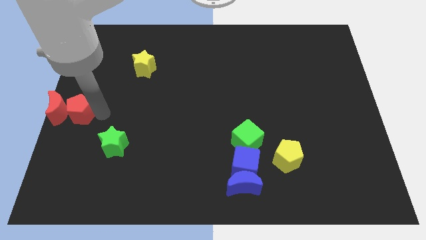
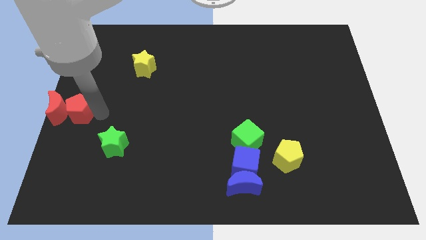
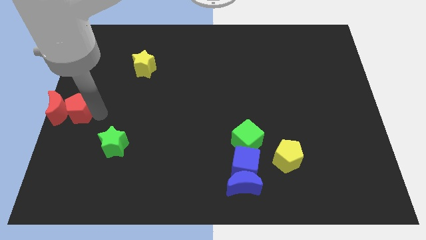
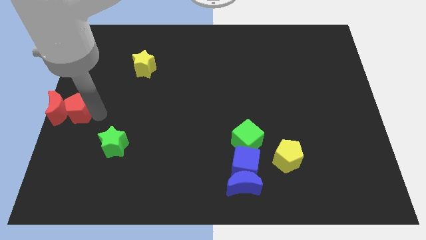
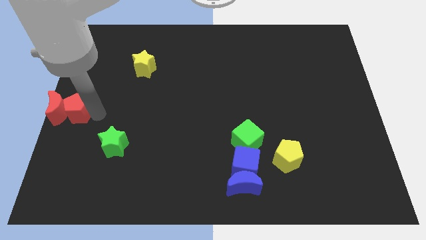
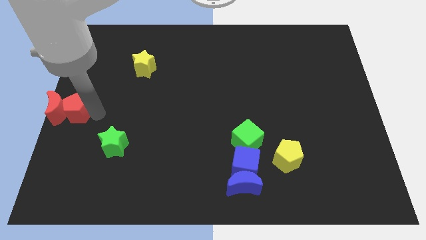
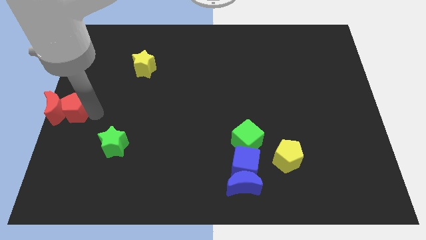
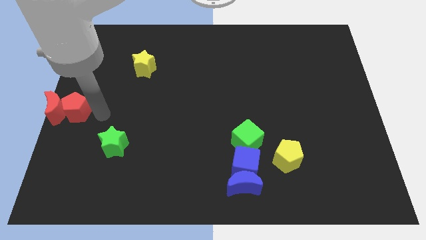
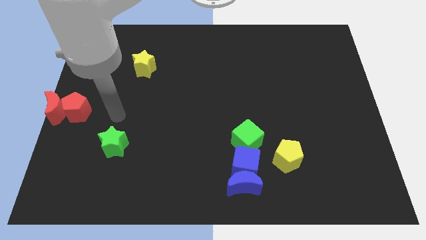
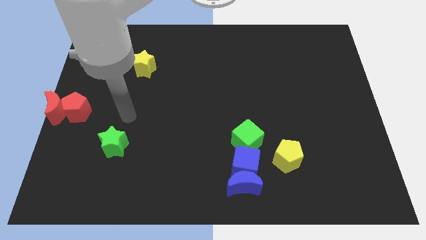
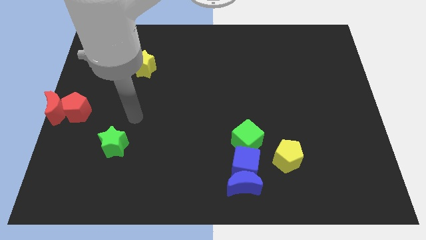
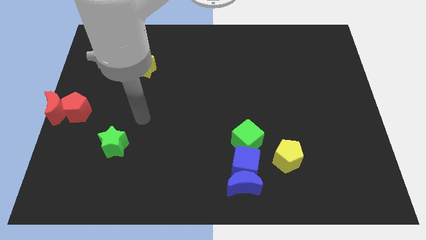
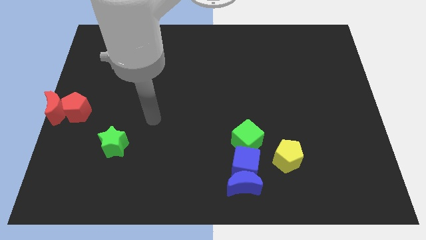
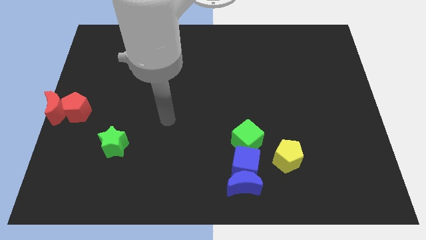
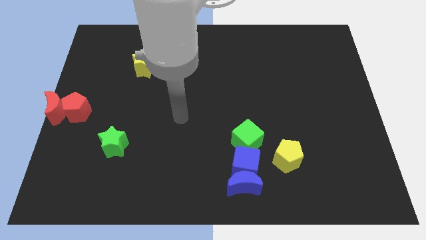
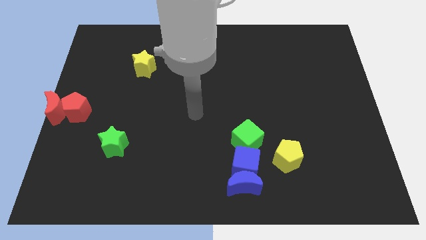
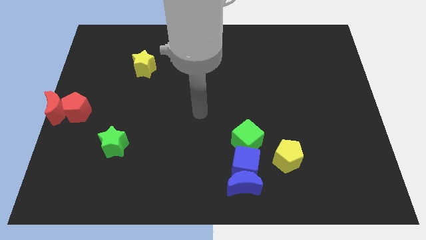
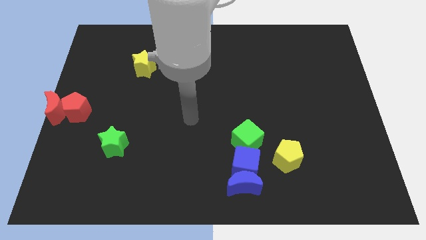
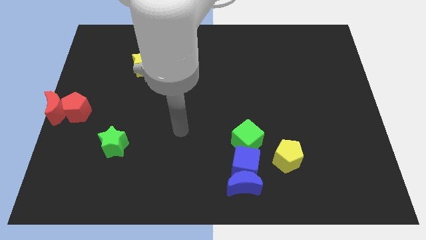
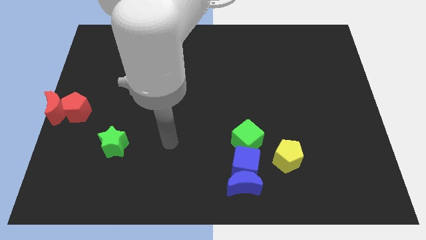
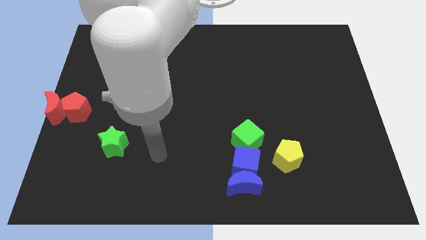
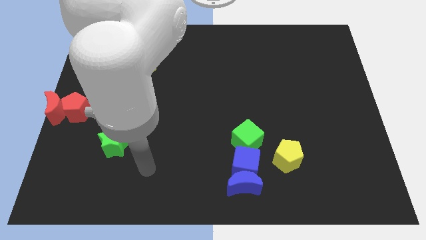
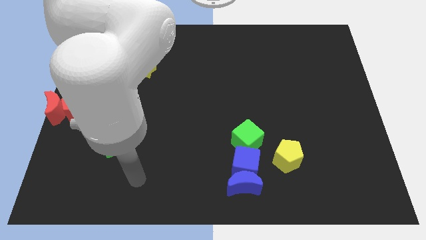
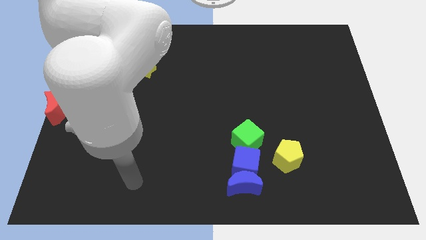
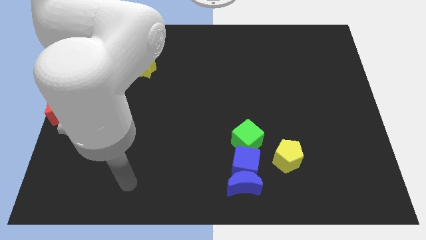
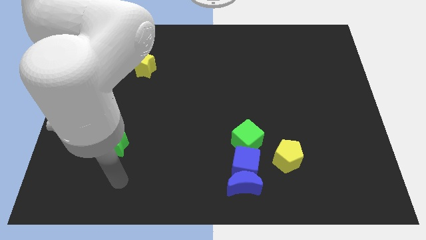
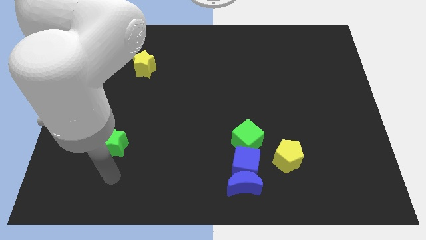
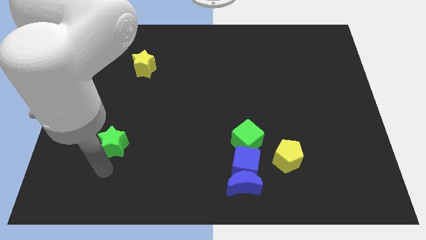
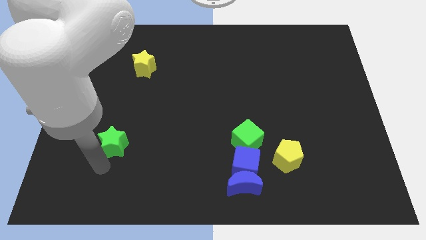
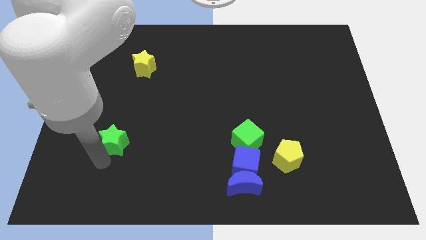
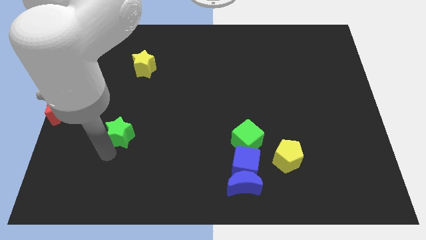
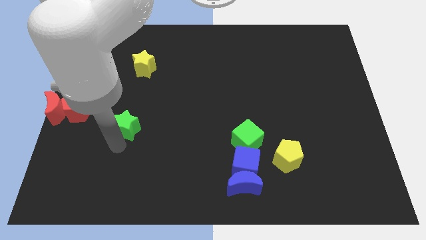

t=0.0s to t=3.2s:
move your arm away from the red pentagon

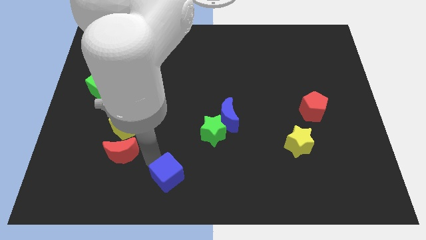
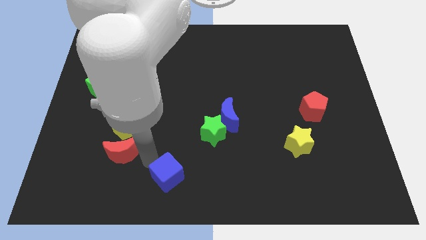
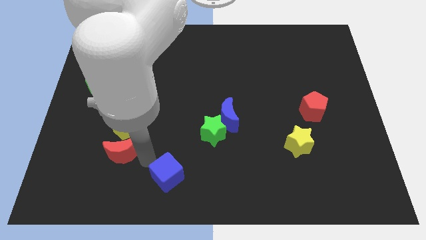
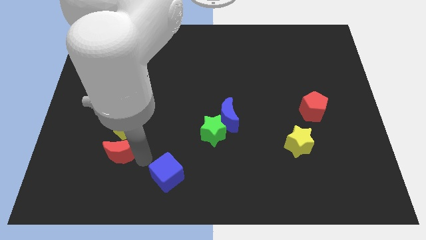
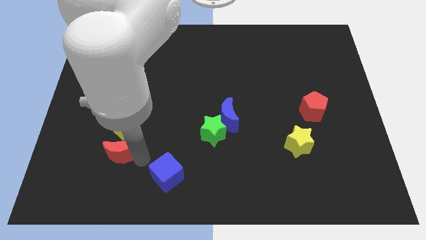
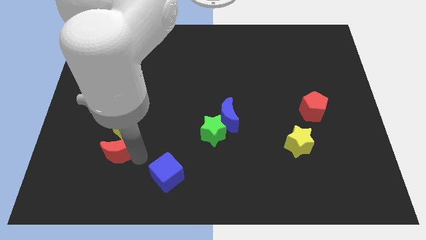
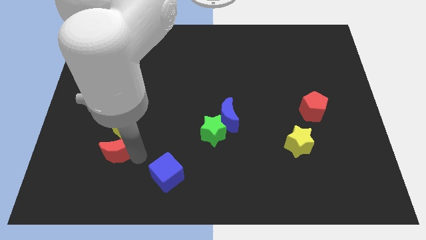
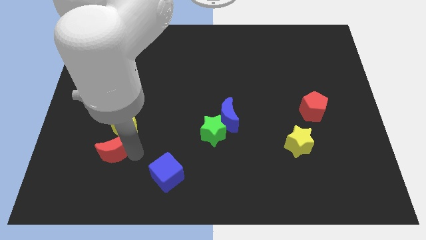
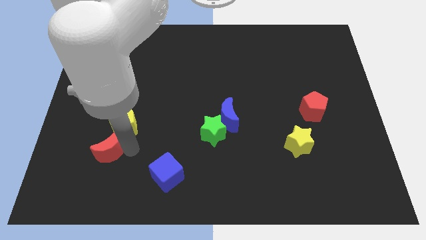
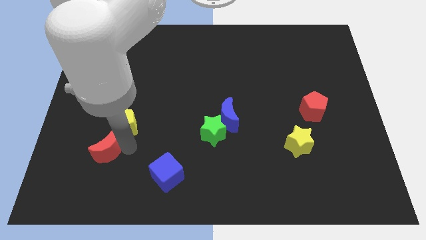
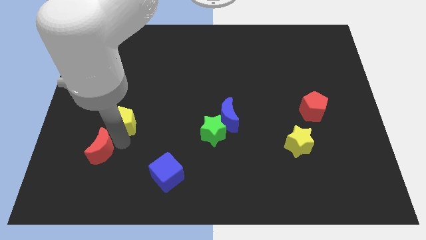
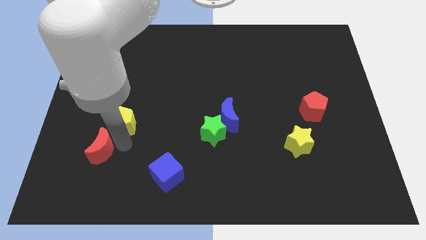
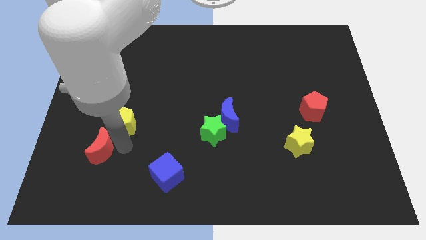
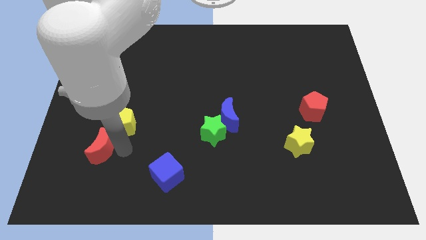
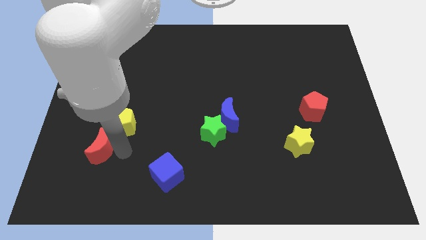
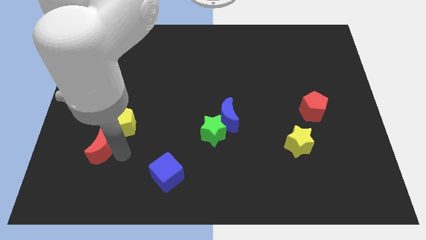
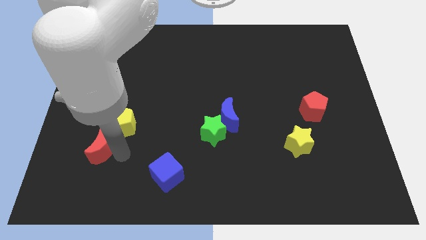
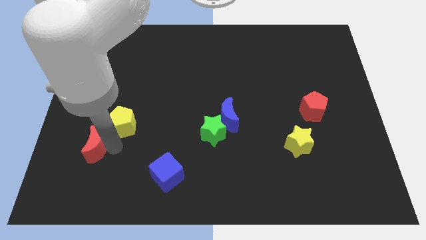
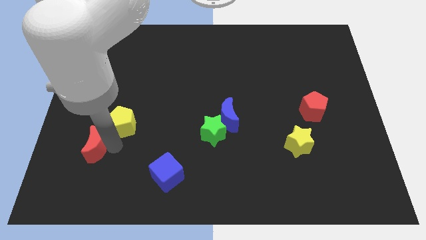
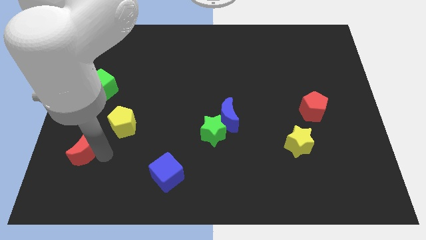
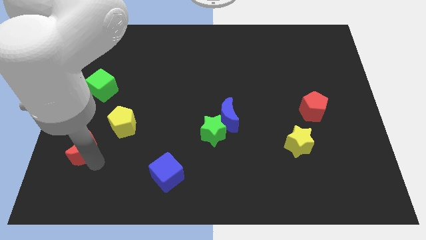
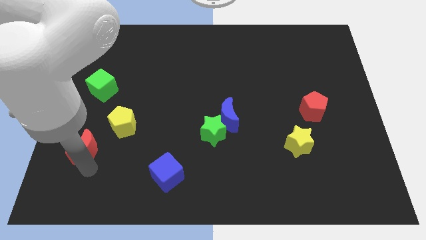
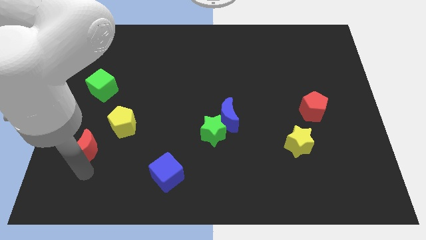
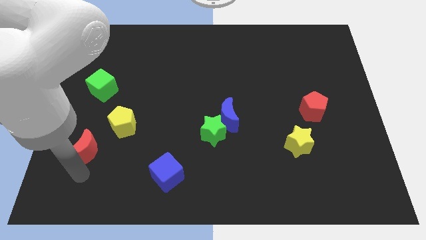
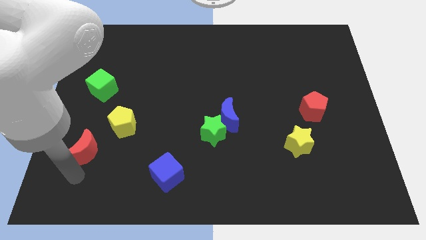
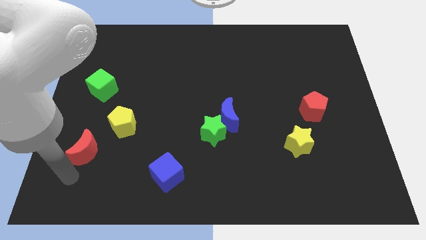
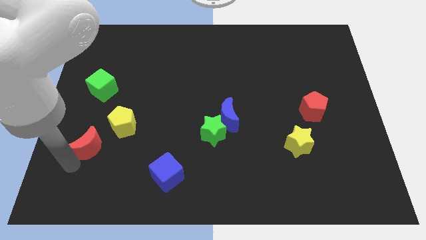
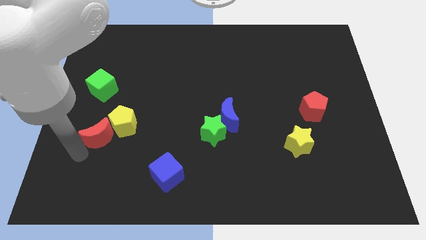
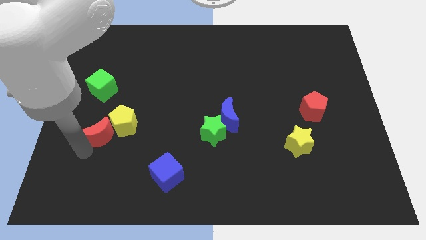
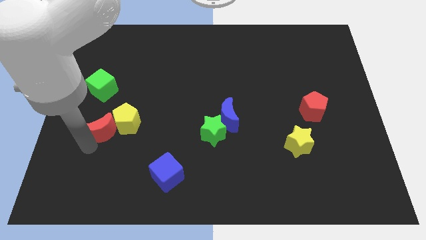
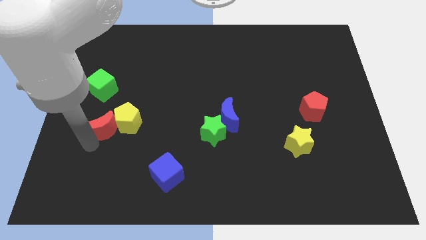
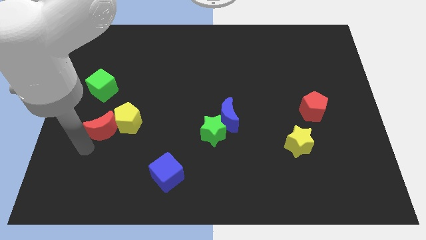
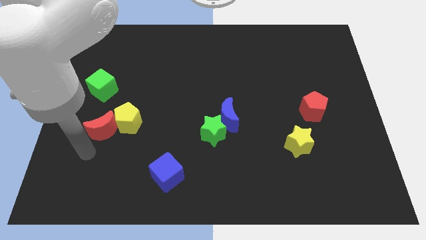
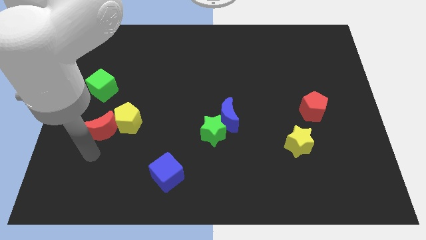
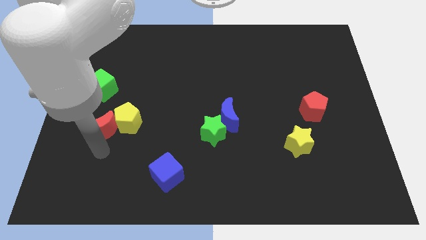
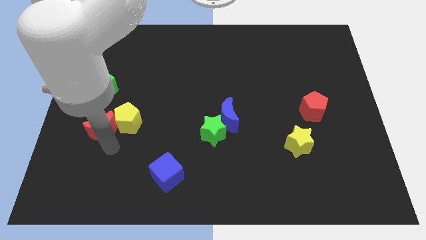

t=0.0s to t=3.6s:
move the red crescent to the bottom side of the green cube

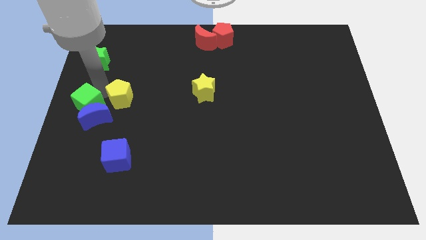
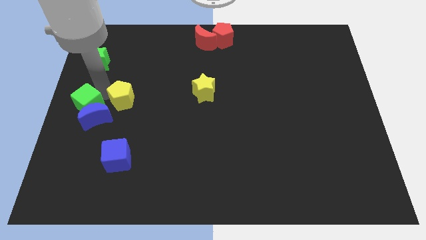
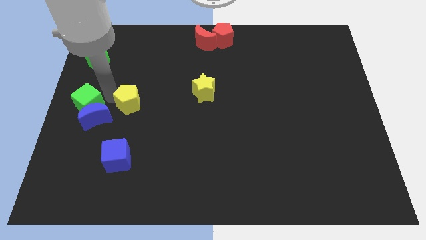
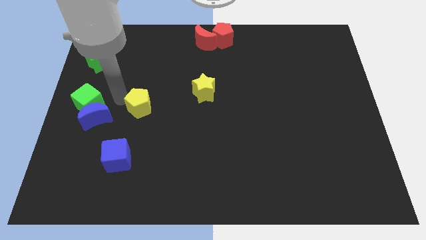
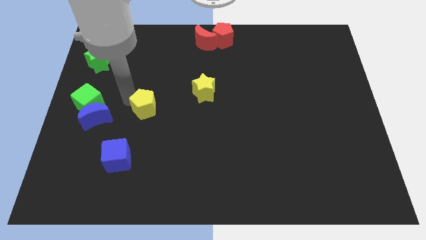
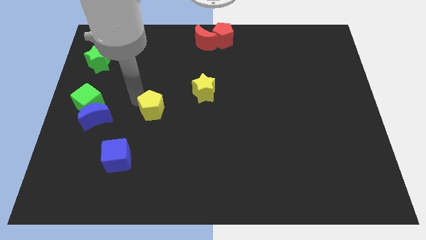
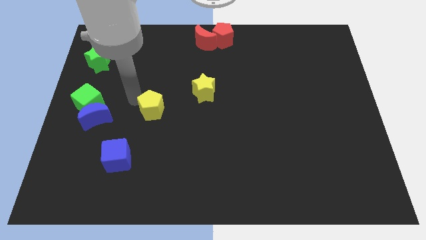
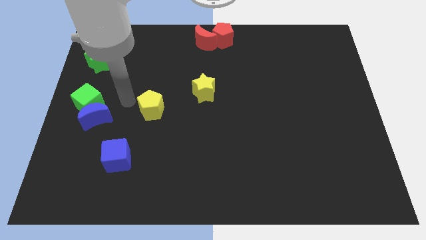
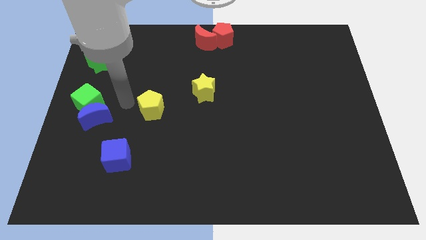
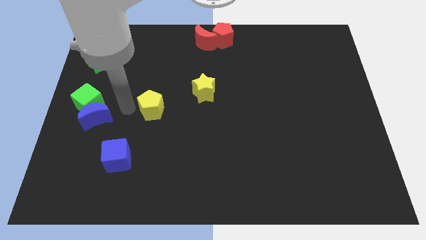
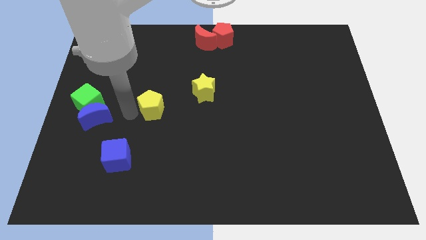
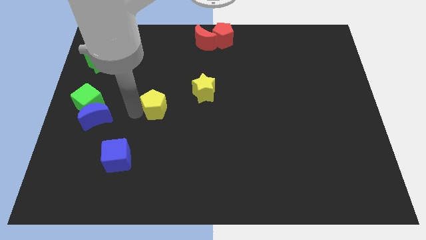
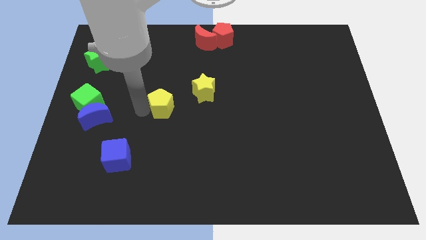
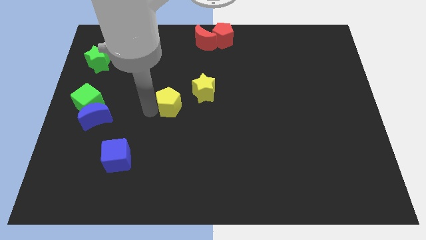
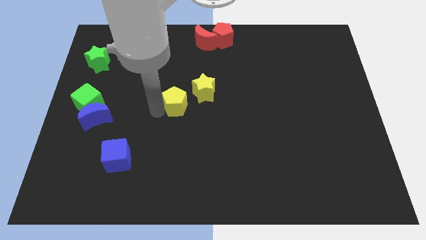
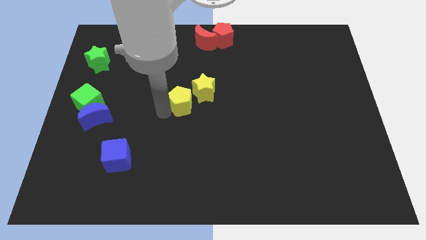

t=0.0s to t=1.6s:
push the yellow pentagon diagonally to the bottom left of the yellow star

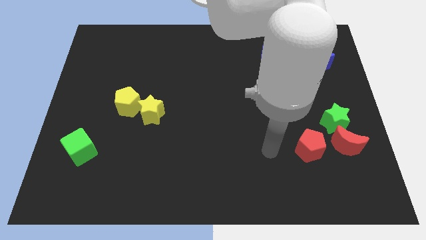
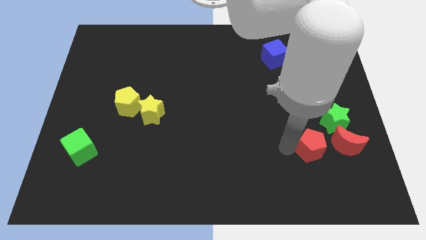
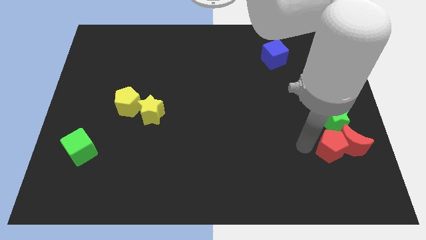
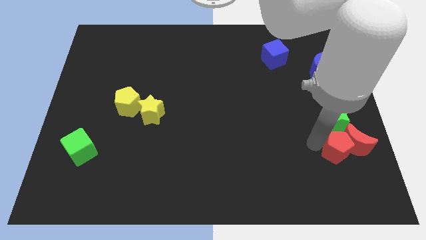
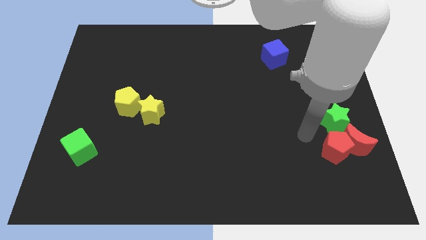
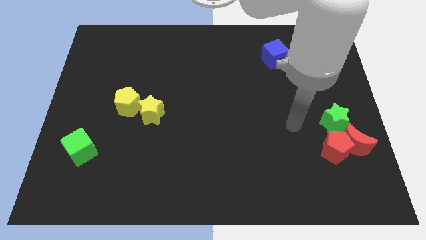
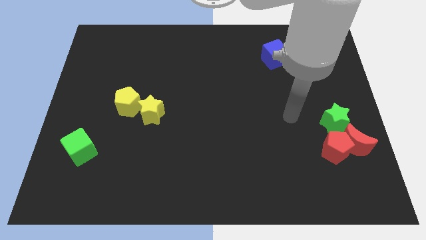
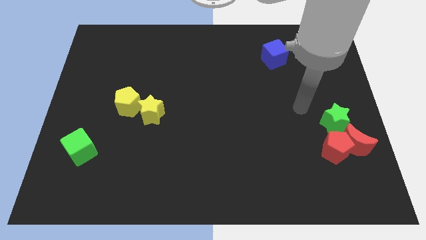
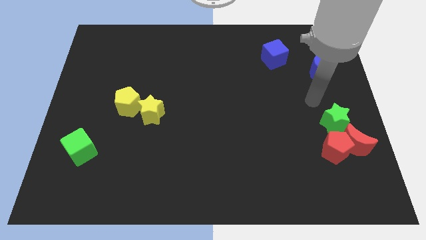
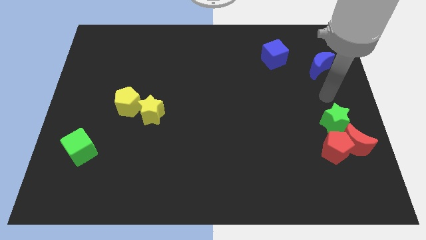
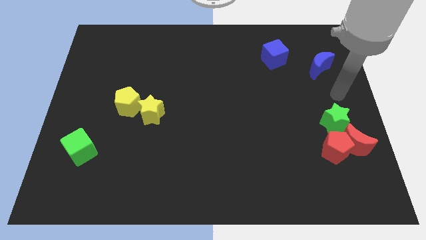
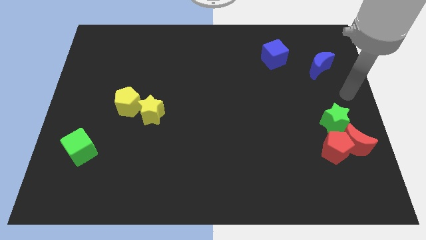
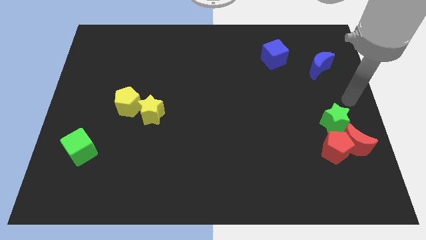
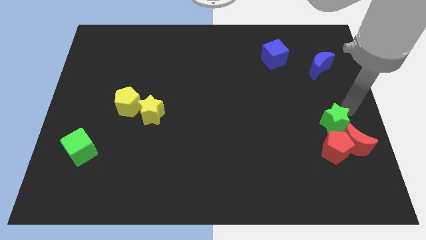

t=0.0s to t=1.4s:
hit red pentagon into red moon
